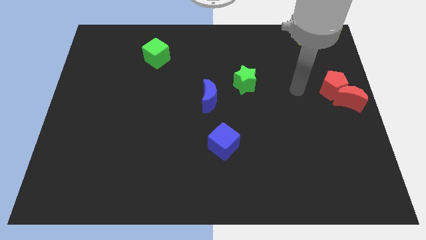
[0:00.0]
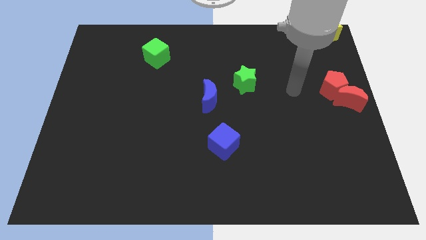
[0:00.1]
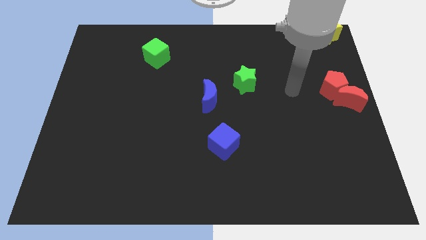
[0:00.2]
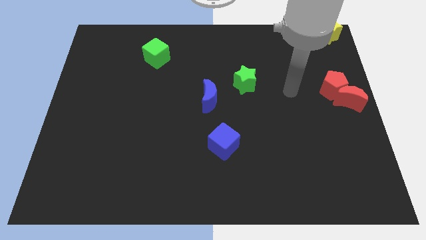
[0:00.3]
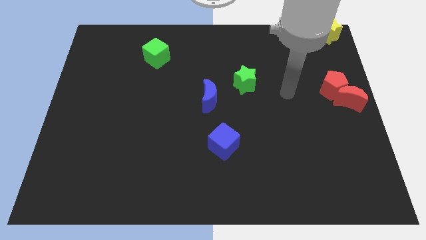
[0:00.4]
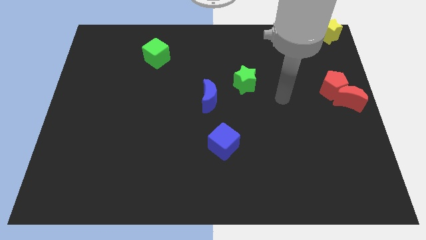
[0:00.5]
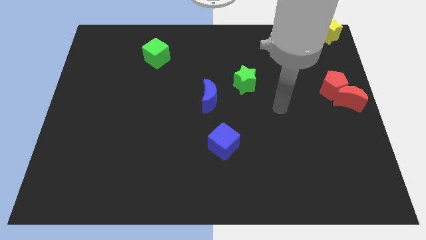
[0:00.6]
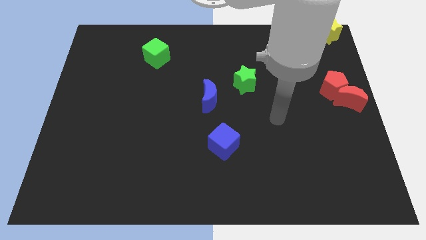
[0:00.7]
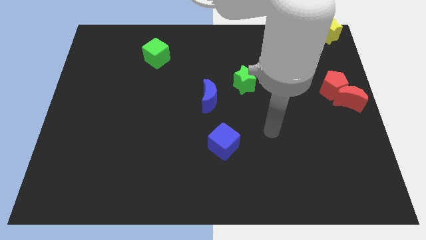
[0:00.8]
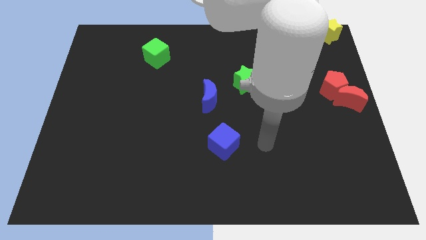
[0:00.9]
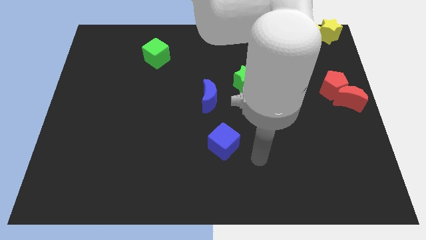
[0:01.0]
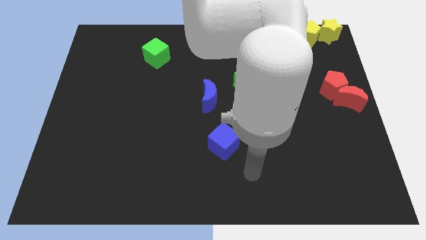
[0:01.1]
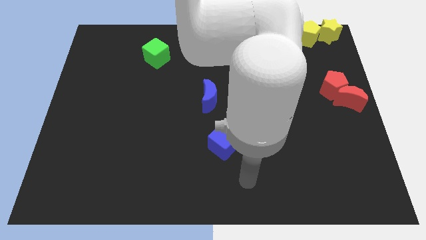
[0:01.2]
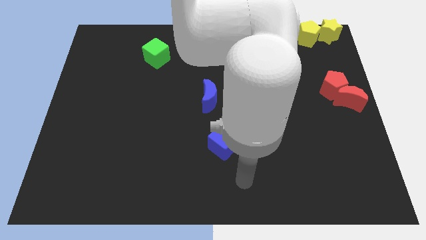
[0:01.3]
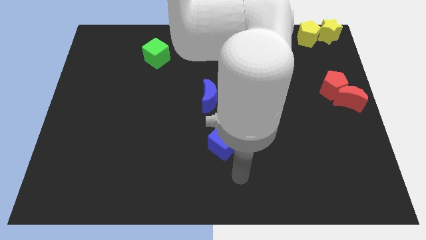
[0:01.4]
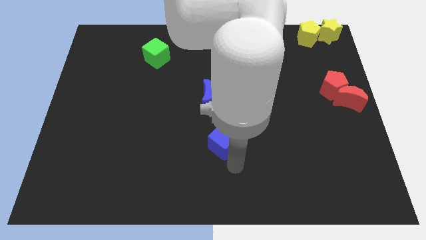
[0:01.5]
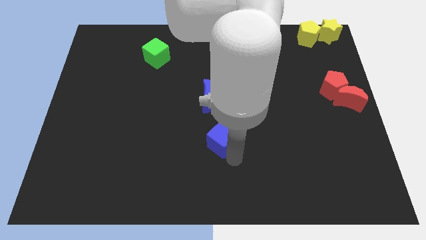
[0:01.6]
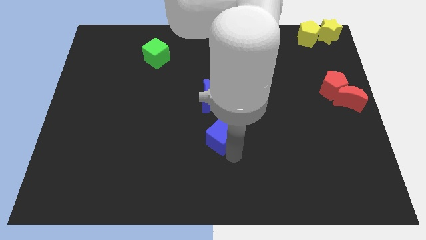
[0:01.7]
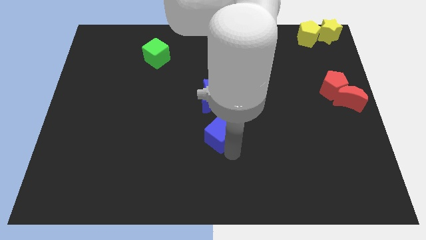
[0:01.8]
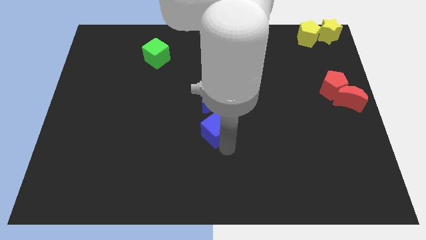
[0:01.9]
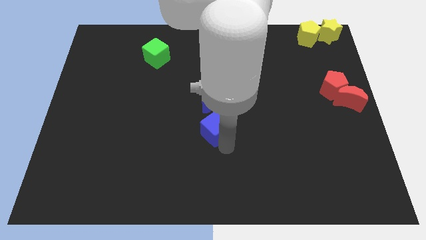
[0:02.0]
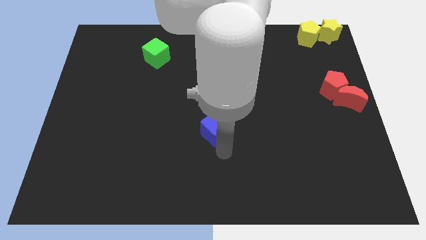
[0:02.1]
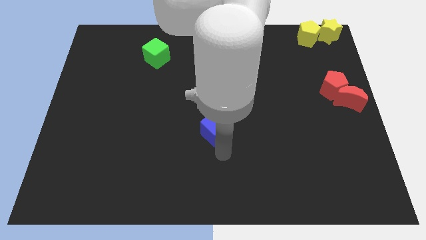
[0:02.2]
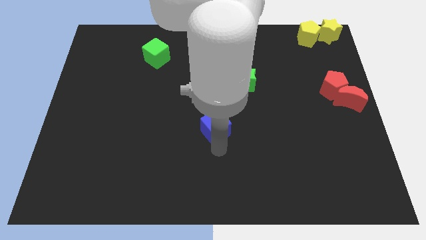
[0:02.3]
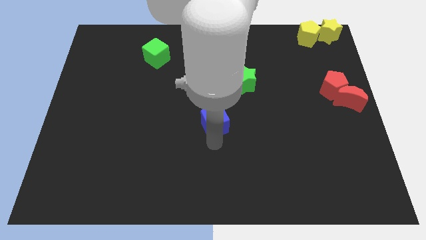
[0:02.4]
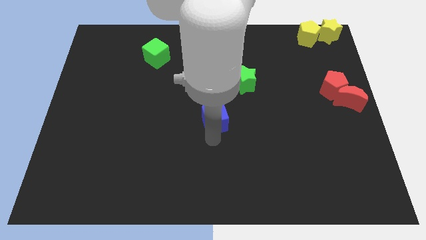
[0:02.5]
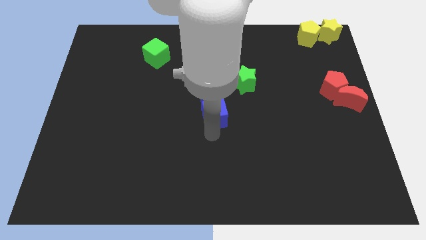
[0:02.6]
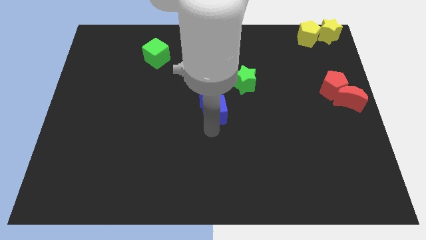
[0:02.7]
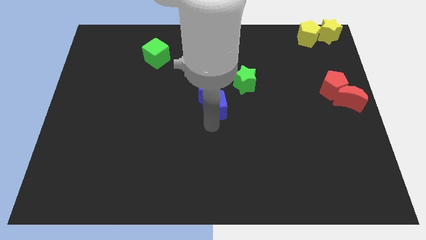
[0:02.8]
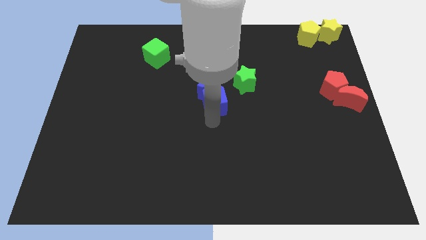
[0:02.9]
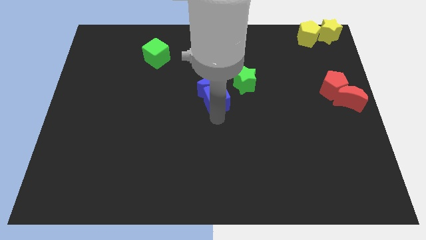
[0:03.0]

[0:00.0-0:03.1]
push the blue blocks towards top side

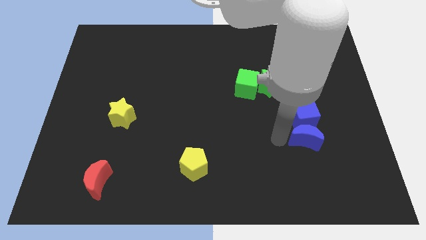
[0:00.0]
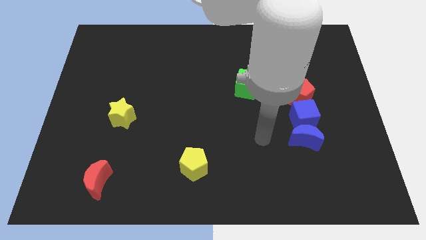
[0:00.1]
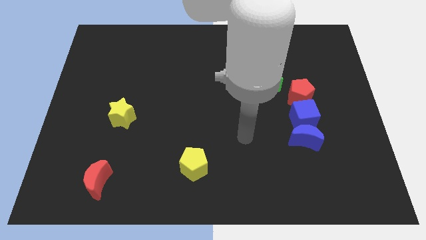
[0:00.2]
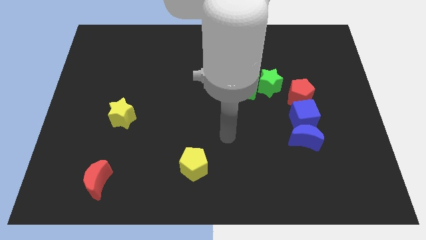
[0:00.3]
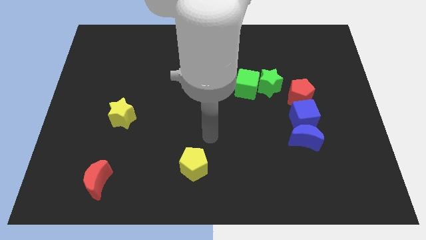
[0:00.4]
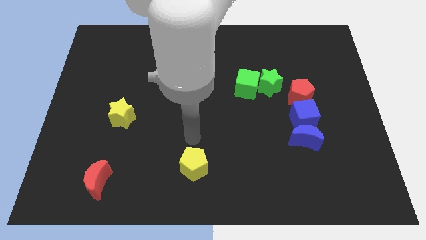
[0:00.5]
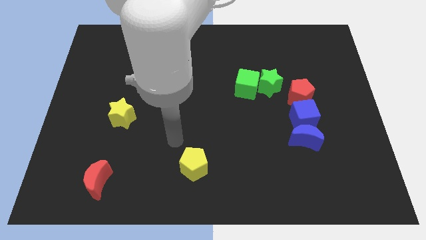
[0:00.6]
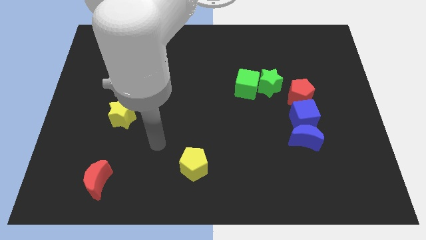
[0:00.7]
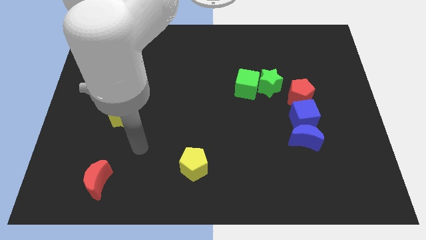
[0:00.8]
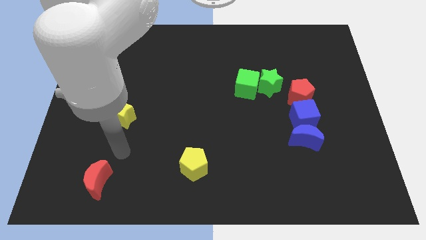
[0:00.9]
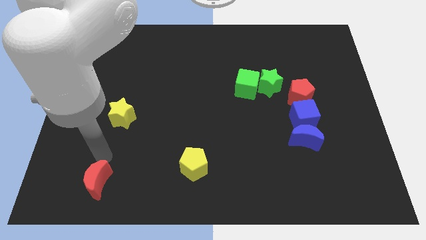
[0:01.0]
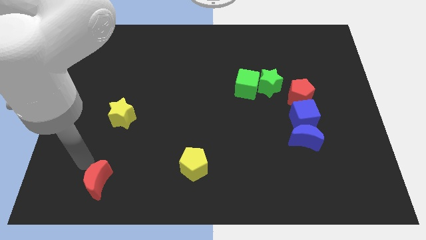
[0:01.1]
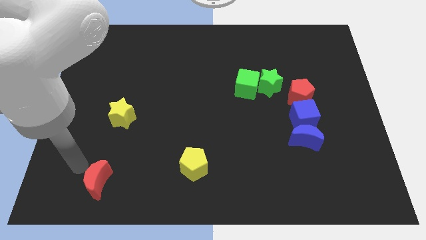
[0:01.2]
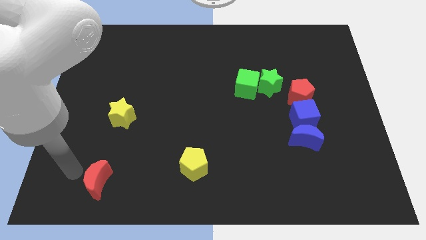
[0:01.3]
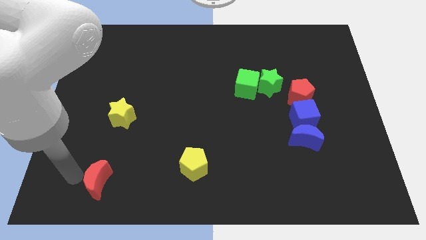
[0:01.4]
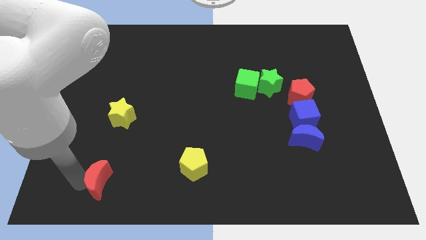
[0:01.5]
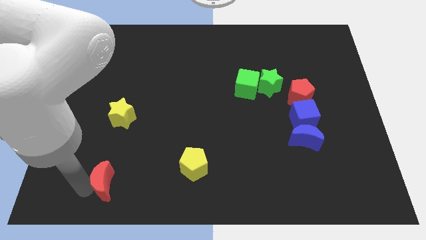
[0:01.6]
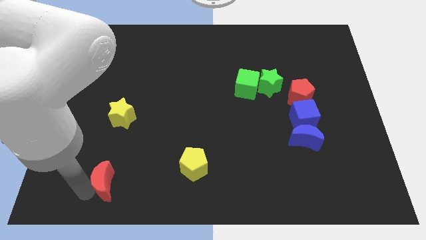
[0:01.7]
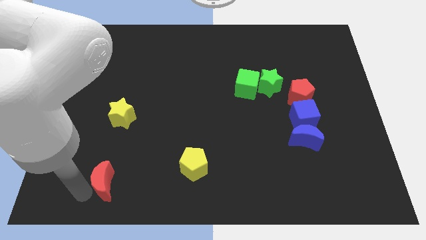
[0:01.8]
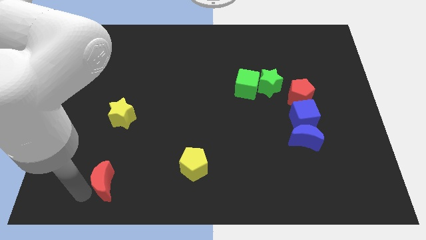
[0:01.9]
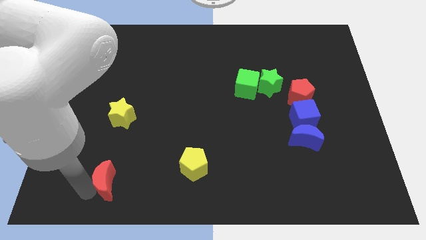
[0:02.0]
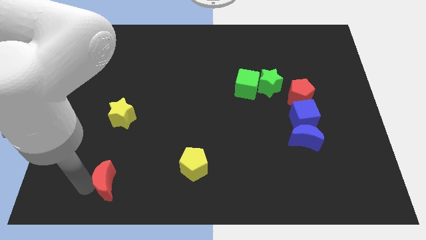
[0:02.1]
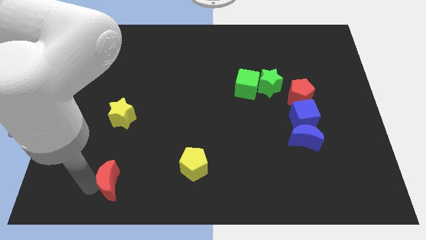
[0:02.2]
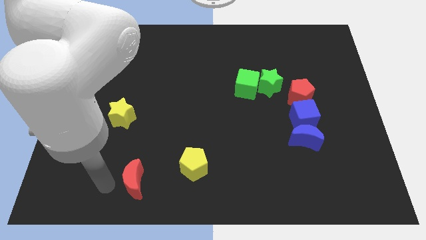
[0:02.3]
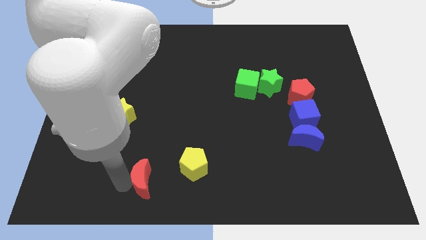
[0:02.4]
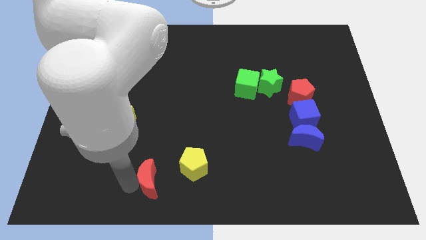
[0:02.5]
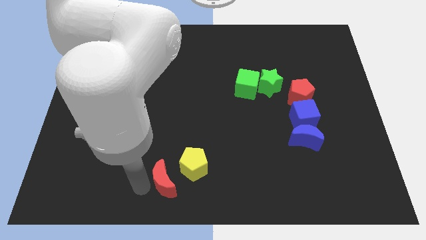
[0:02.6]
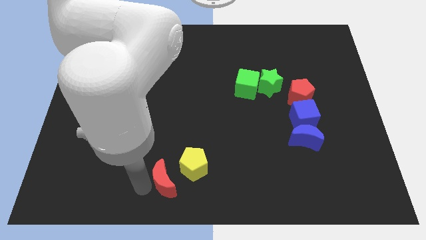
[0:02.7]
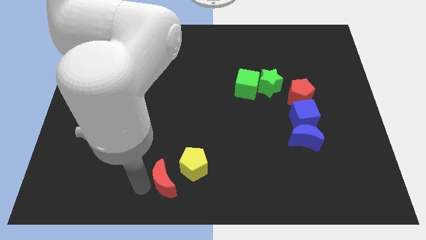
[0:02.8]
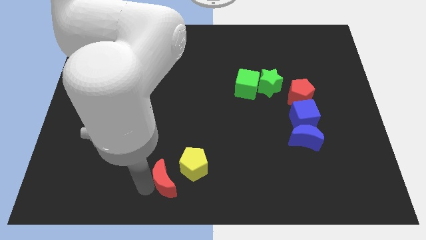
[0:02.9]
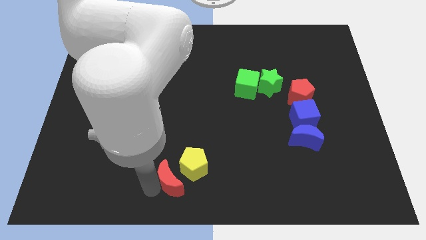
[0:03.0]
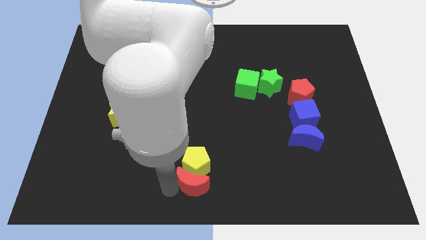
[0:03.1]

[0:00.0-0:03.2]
push the red moon down to the yellow pentagon

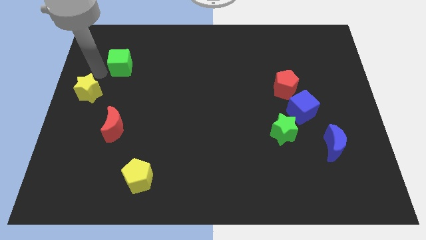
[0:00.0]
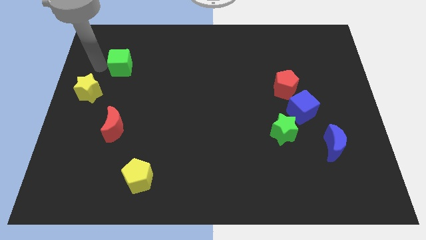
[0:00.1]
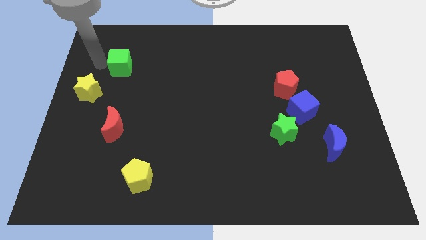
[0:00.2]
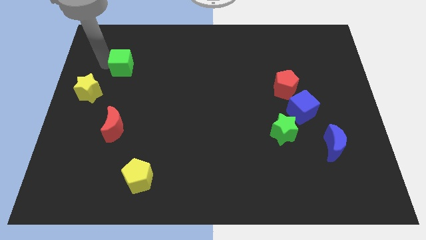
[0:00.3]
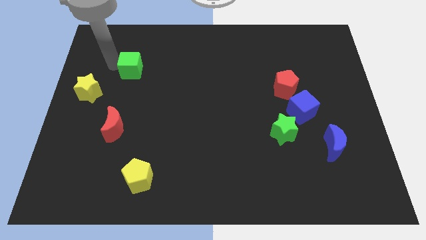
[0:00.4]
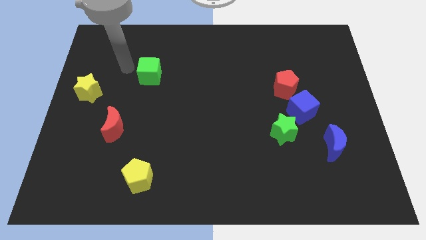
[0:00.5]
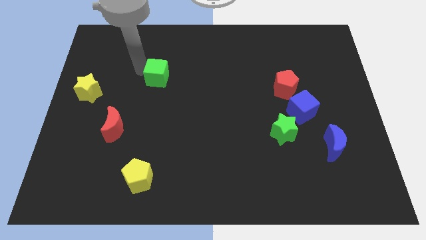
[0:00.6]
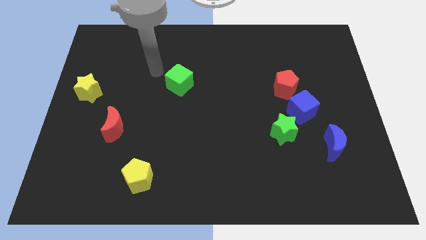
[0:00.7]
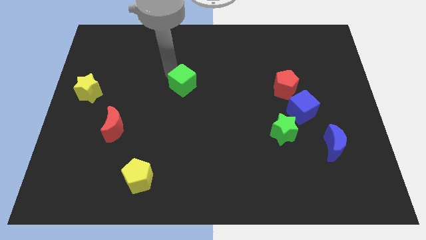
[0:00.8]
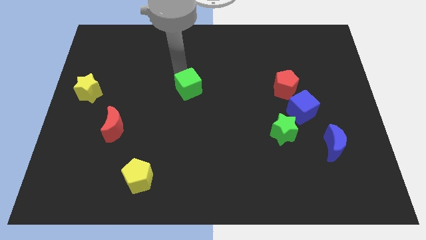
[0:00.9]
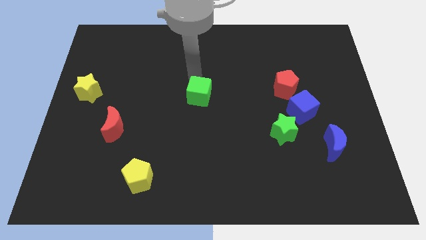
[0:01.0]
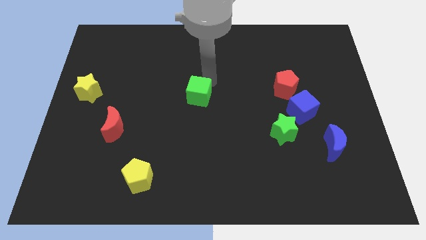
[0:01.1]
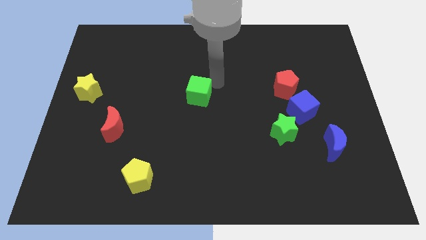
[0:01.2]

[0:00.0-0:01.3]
push the green cube to the left of the red pentagon

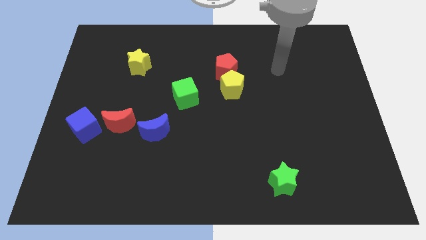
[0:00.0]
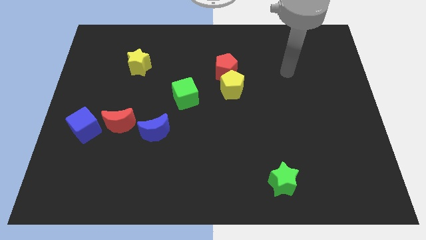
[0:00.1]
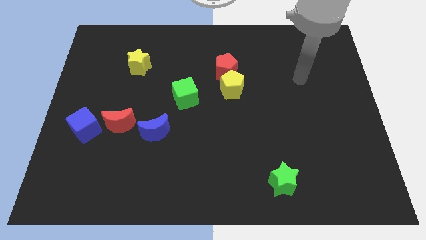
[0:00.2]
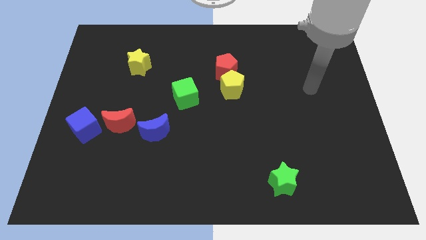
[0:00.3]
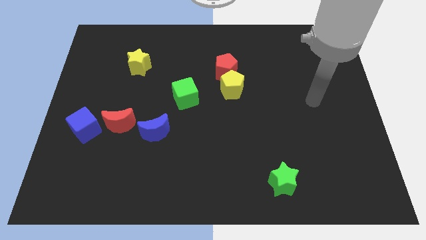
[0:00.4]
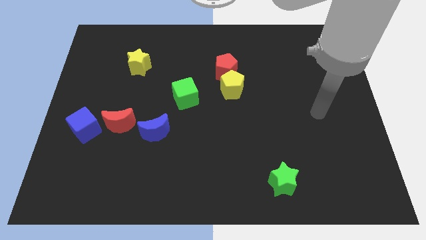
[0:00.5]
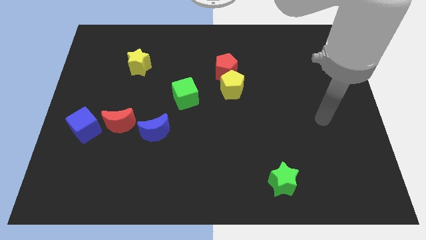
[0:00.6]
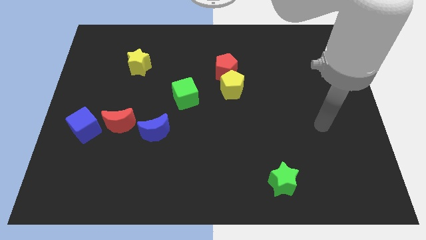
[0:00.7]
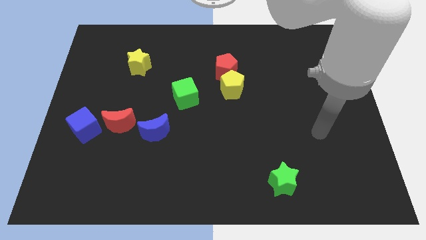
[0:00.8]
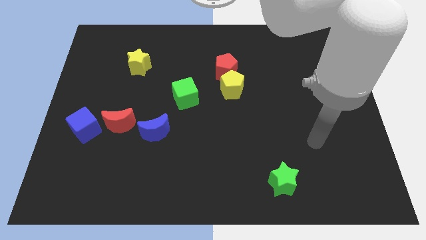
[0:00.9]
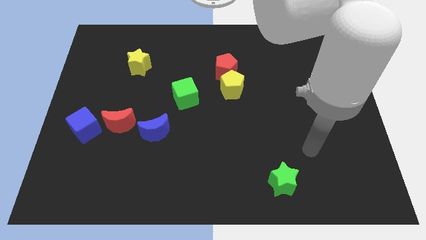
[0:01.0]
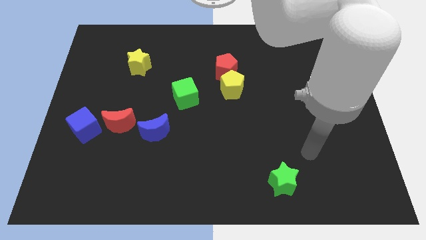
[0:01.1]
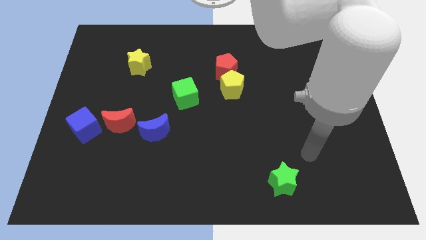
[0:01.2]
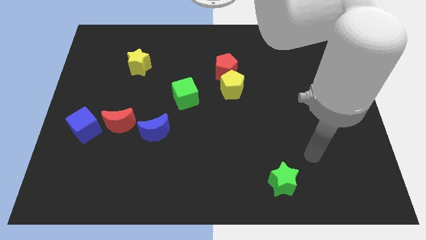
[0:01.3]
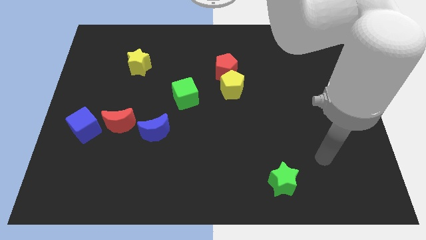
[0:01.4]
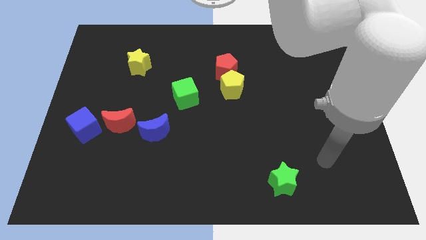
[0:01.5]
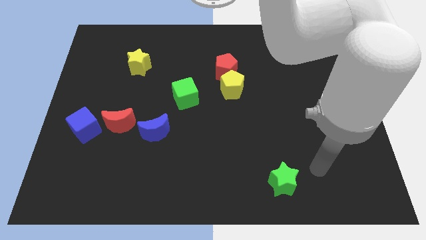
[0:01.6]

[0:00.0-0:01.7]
move your arm towards the green star
